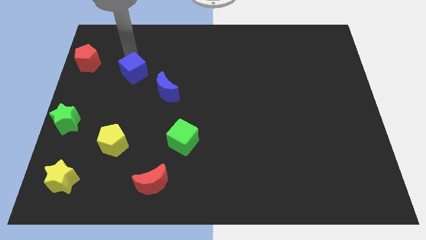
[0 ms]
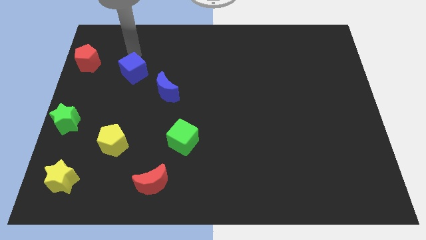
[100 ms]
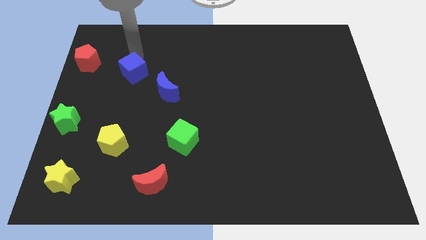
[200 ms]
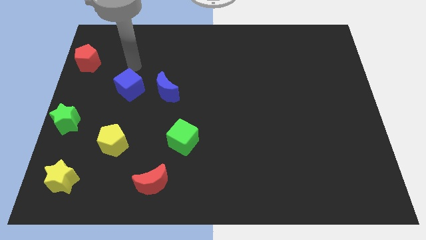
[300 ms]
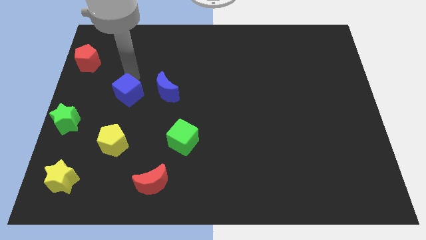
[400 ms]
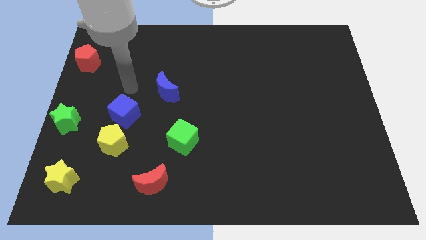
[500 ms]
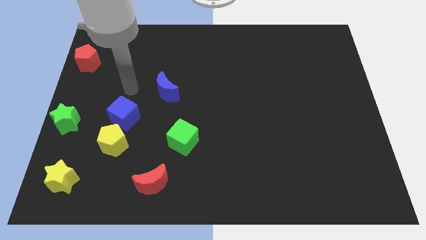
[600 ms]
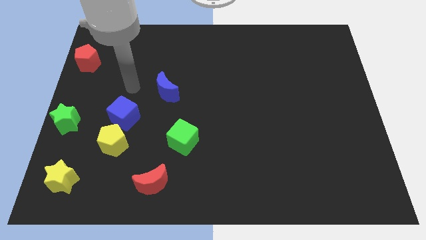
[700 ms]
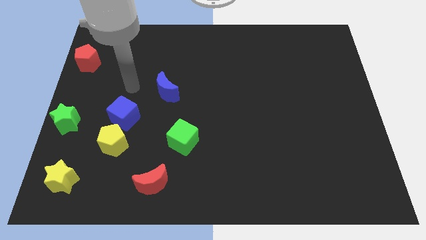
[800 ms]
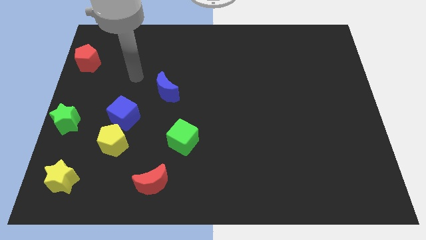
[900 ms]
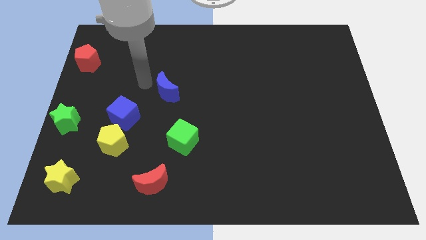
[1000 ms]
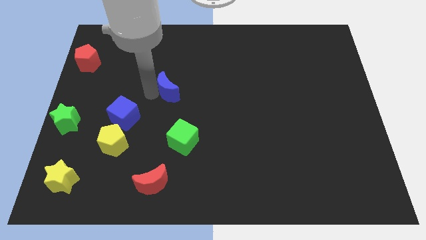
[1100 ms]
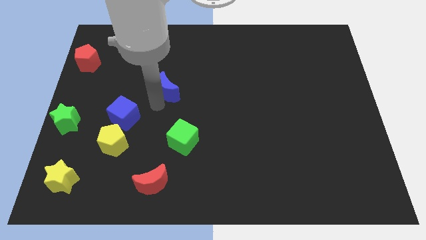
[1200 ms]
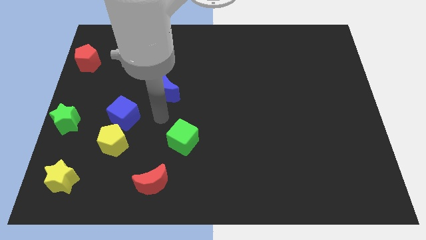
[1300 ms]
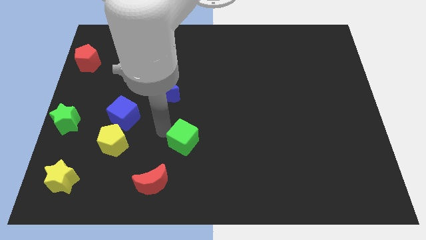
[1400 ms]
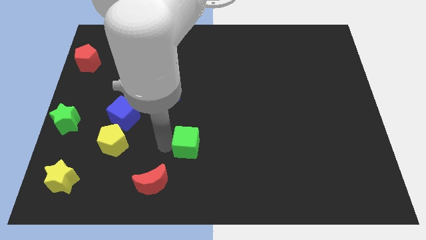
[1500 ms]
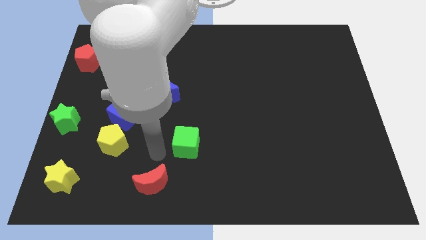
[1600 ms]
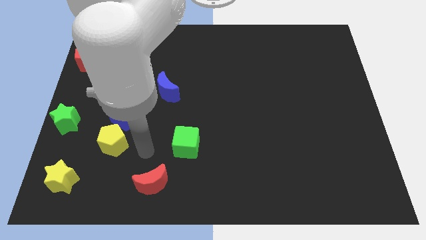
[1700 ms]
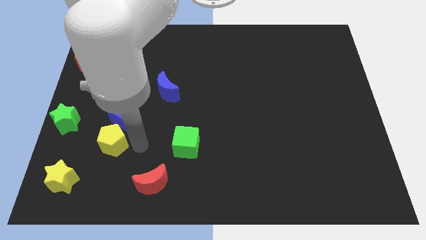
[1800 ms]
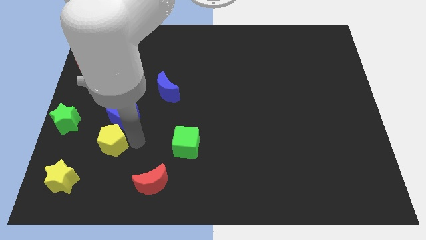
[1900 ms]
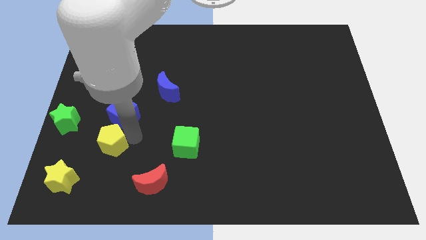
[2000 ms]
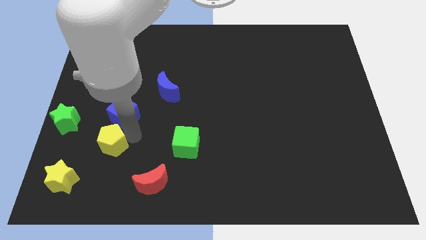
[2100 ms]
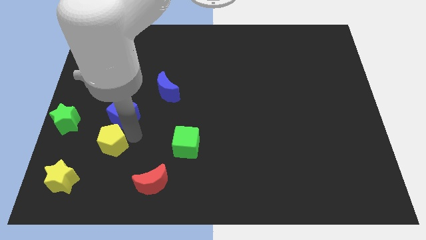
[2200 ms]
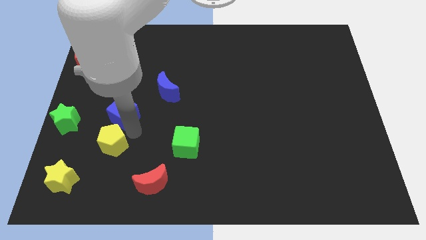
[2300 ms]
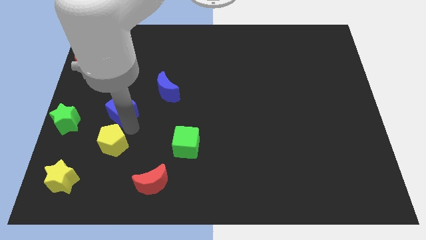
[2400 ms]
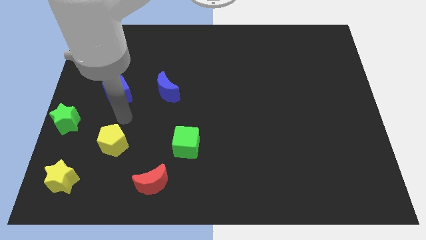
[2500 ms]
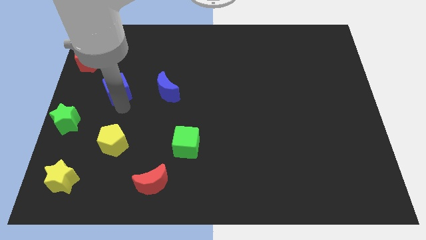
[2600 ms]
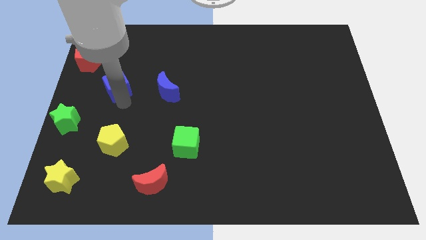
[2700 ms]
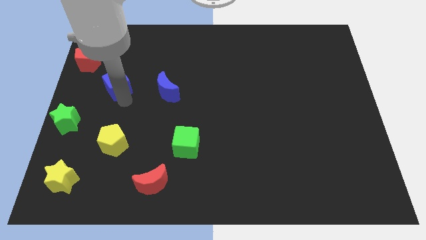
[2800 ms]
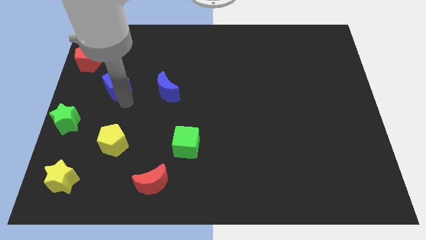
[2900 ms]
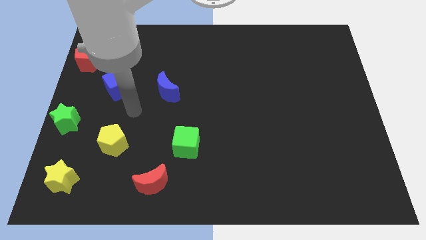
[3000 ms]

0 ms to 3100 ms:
place the blue cube left side of the blue crescent

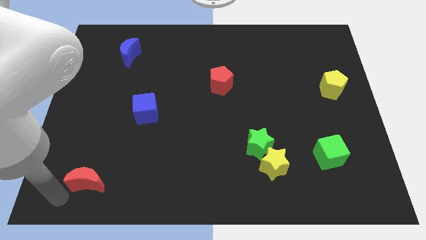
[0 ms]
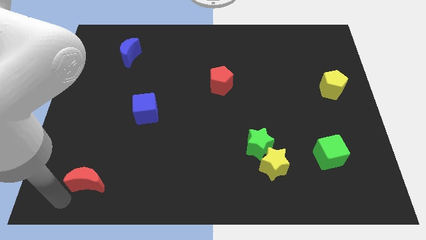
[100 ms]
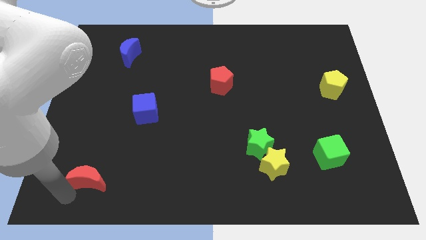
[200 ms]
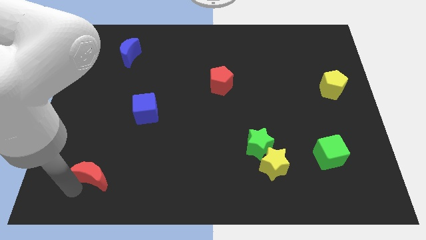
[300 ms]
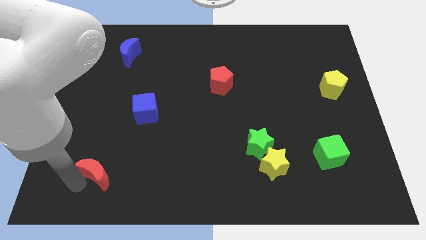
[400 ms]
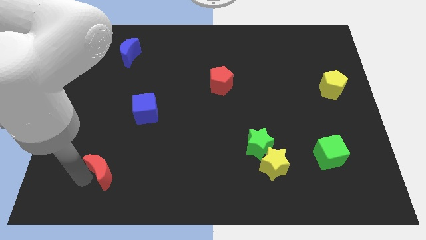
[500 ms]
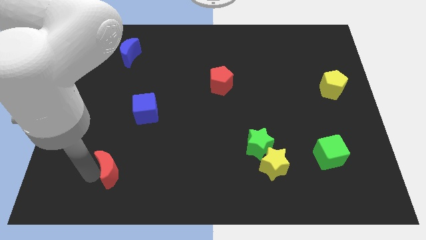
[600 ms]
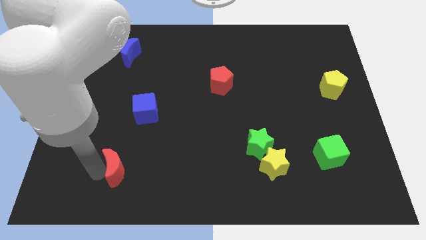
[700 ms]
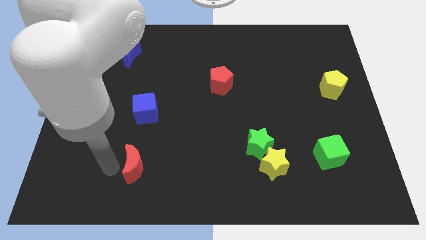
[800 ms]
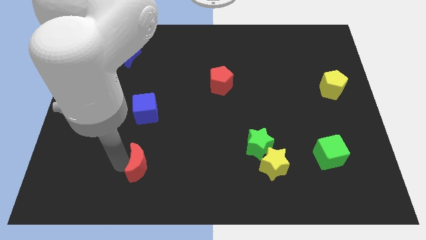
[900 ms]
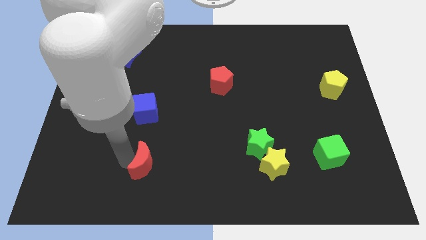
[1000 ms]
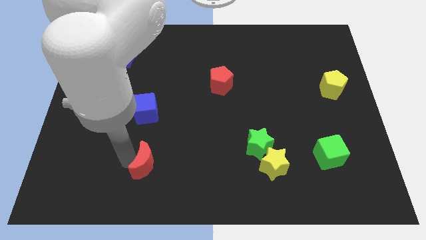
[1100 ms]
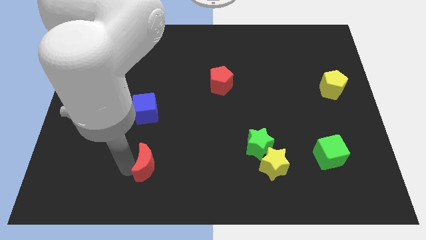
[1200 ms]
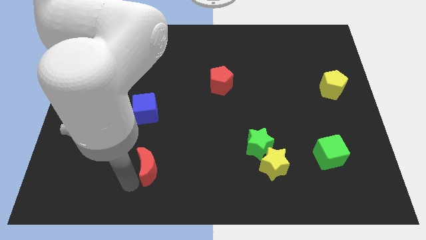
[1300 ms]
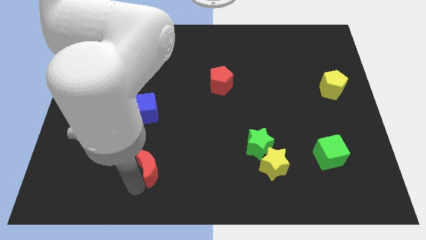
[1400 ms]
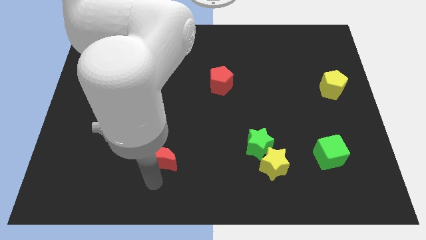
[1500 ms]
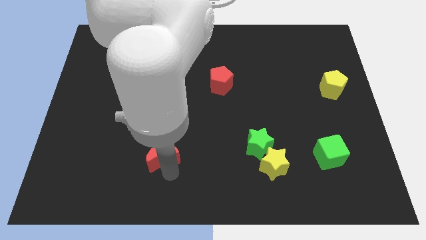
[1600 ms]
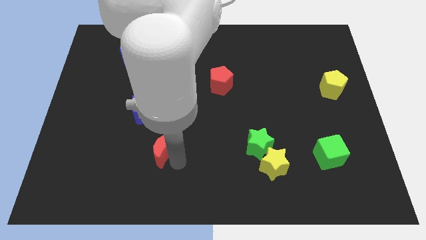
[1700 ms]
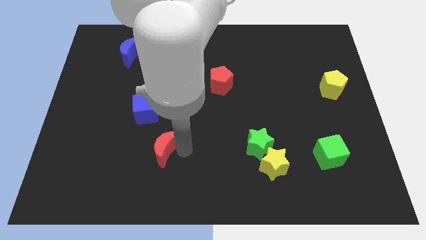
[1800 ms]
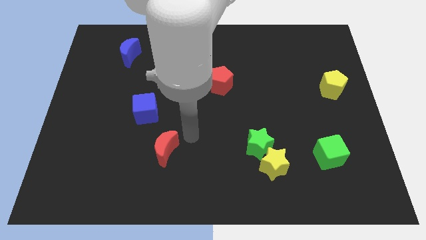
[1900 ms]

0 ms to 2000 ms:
place the red moon diagonally to the blue cube

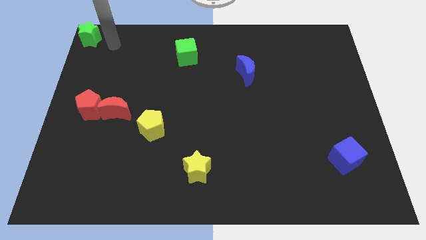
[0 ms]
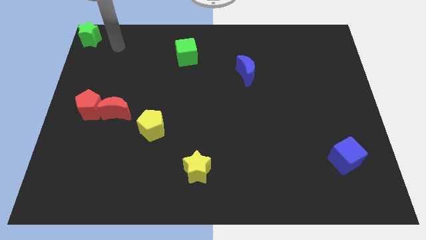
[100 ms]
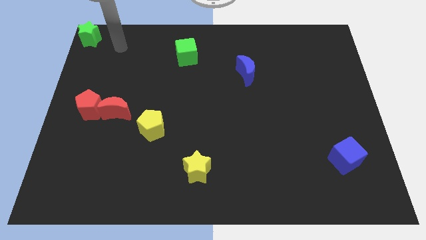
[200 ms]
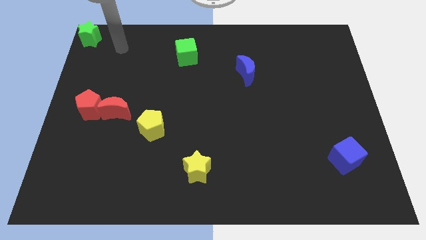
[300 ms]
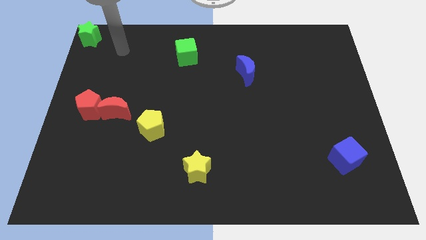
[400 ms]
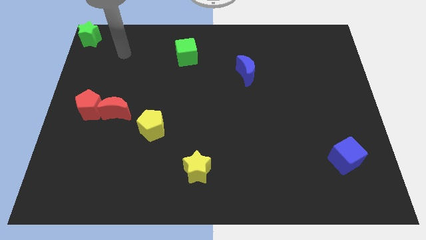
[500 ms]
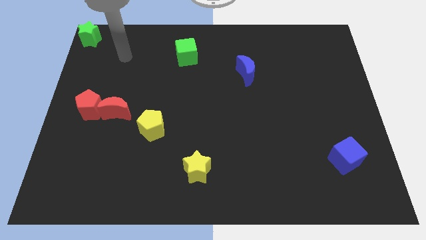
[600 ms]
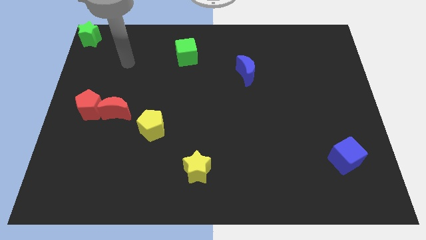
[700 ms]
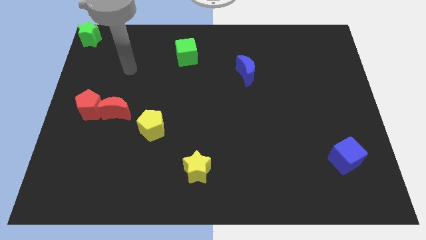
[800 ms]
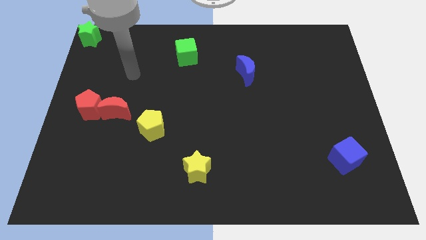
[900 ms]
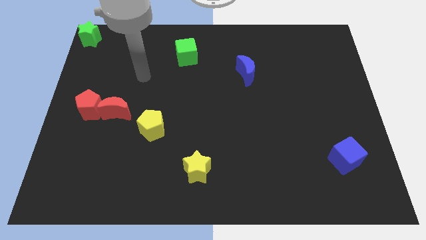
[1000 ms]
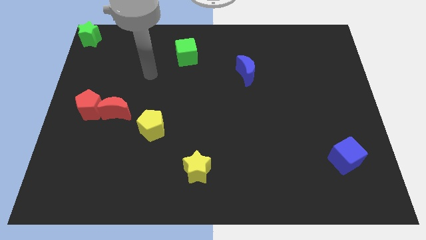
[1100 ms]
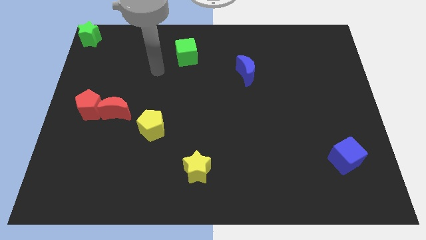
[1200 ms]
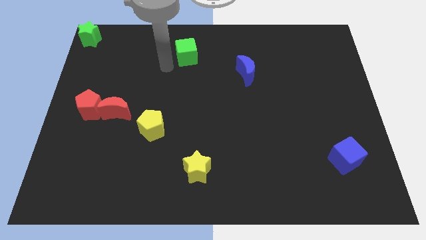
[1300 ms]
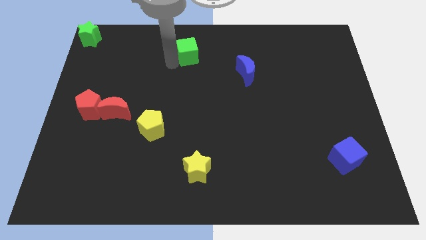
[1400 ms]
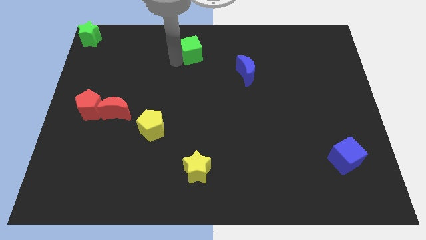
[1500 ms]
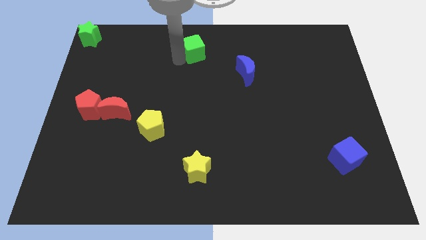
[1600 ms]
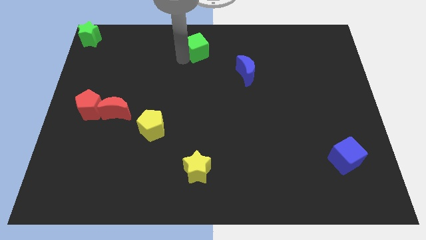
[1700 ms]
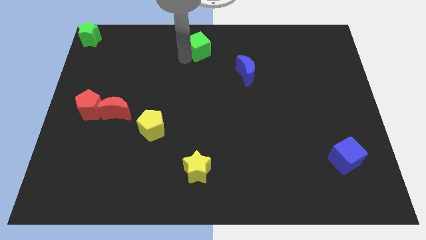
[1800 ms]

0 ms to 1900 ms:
push the green cube towards the right of the board

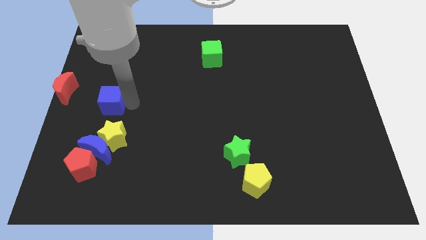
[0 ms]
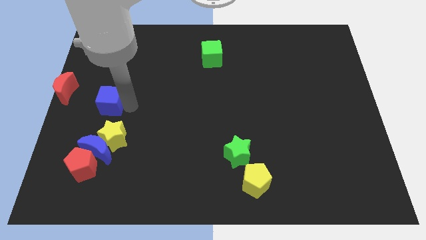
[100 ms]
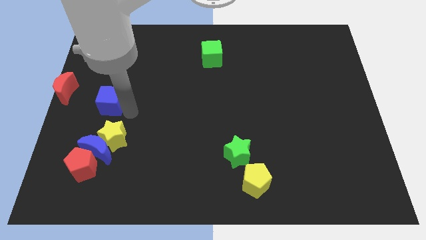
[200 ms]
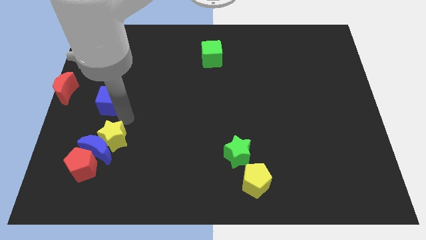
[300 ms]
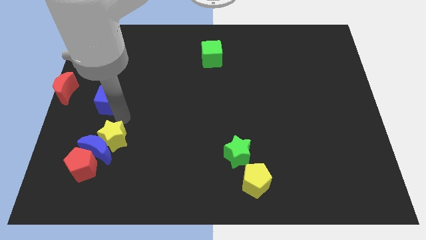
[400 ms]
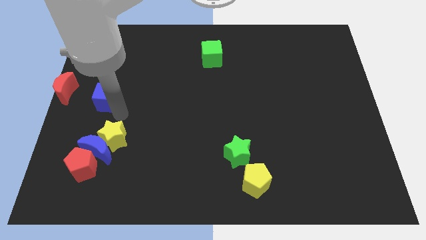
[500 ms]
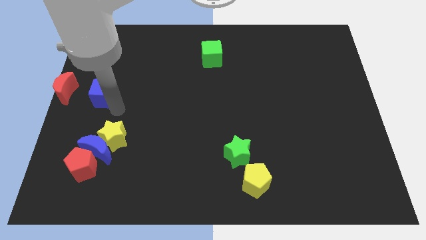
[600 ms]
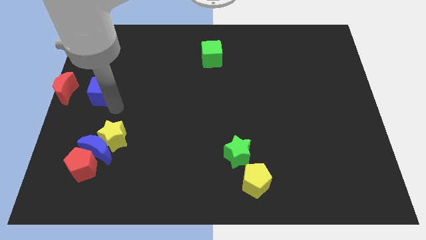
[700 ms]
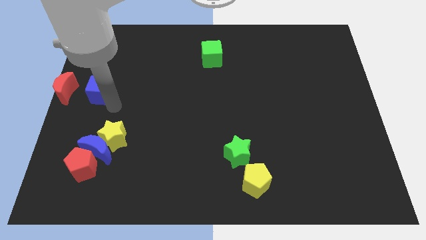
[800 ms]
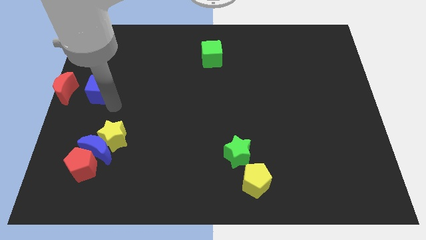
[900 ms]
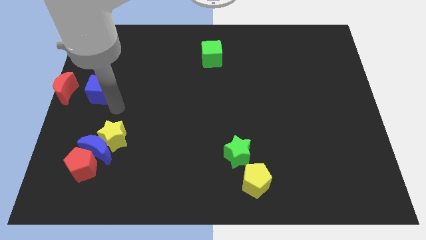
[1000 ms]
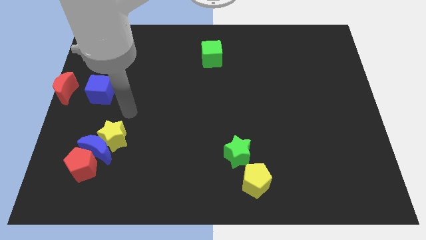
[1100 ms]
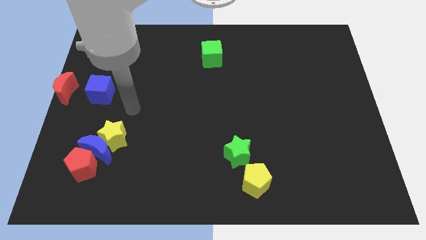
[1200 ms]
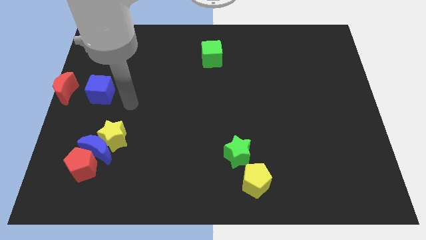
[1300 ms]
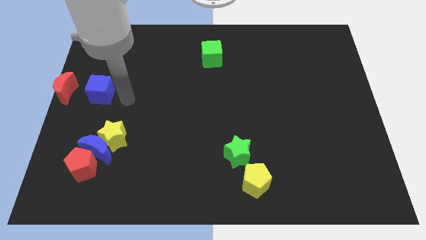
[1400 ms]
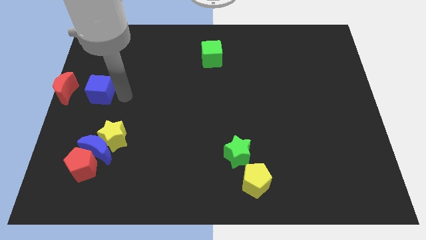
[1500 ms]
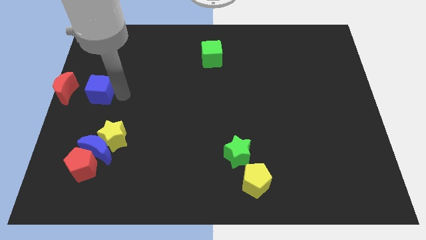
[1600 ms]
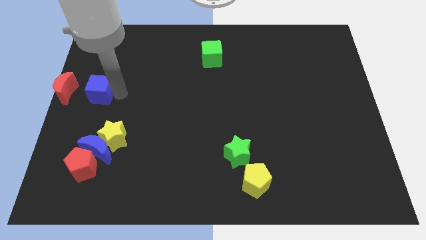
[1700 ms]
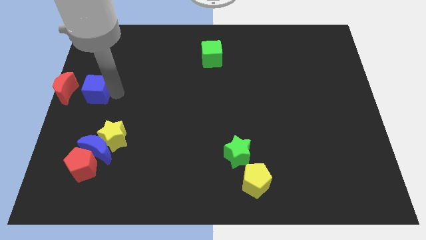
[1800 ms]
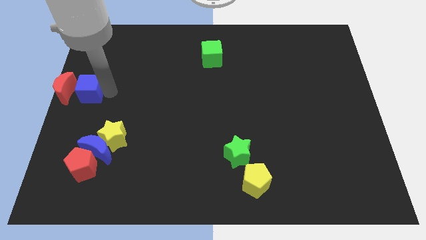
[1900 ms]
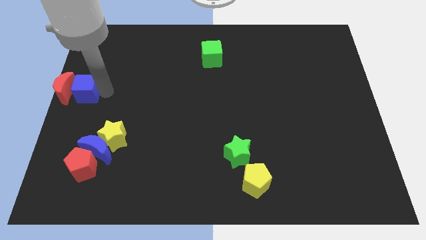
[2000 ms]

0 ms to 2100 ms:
place blue cube near red crescent
